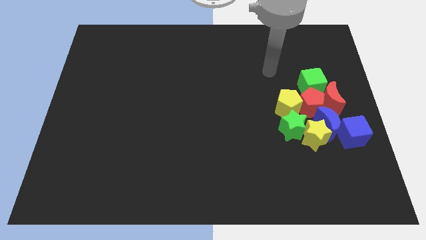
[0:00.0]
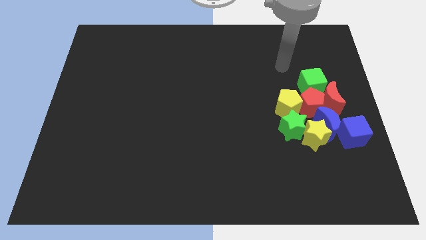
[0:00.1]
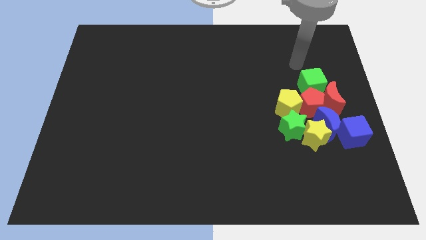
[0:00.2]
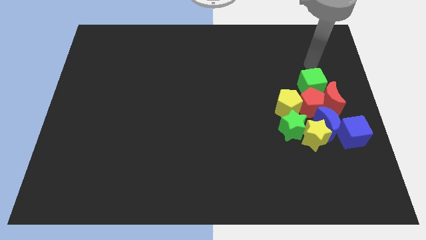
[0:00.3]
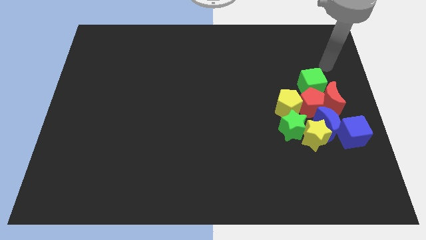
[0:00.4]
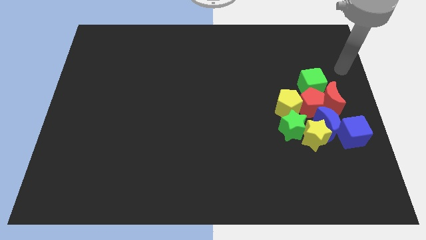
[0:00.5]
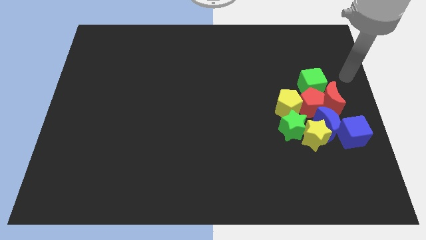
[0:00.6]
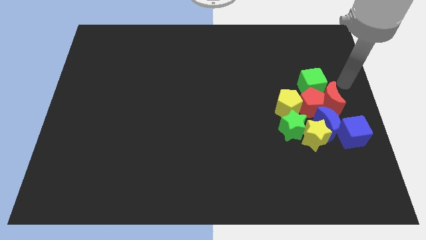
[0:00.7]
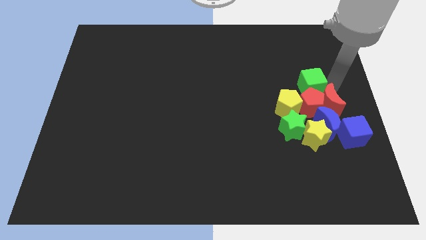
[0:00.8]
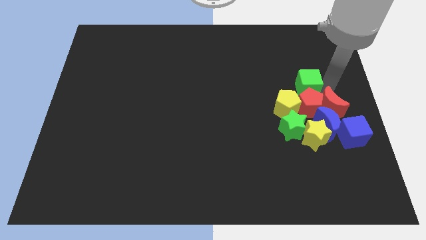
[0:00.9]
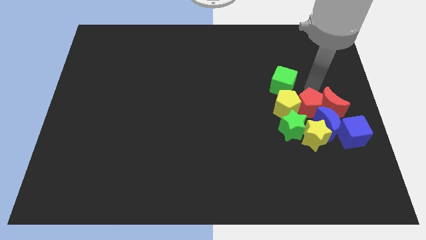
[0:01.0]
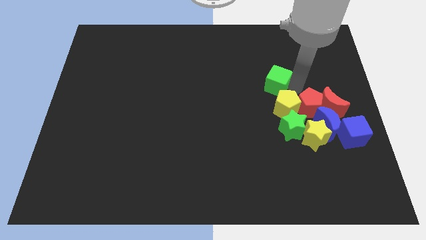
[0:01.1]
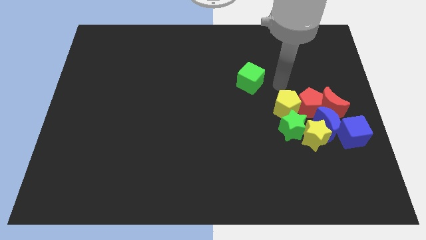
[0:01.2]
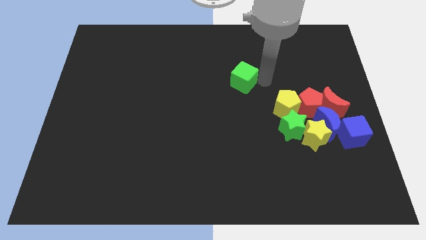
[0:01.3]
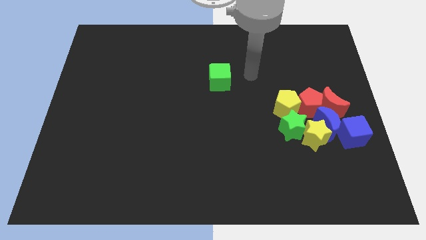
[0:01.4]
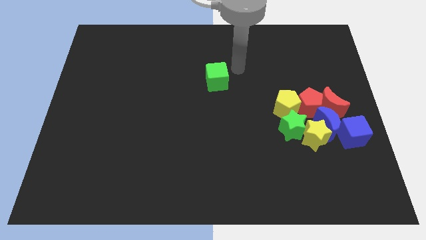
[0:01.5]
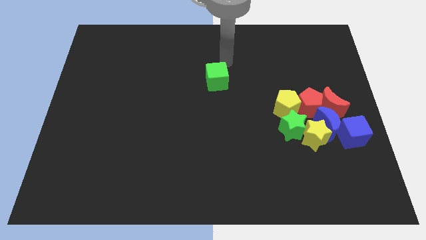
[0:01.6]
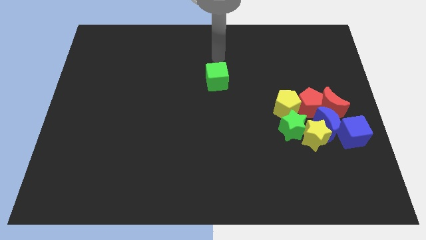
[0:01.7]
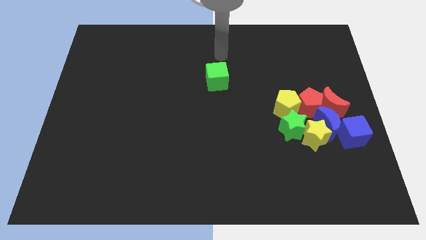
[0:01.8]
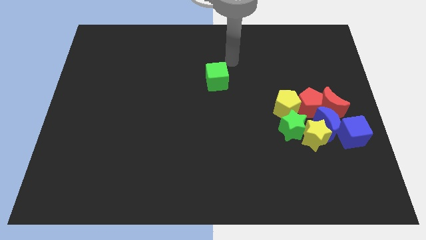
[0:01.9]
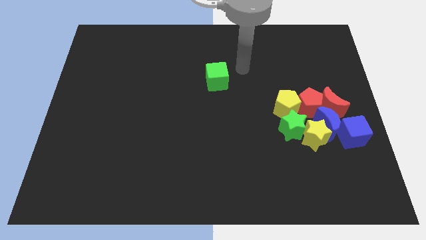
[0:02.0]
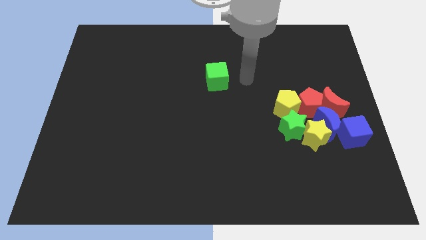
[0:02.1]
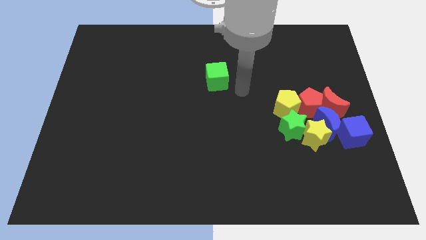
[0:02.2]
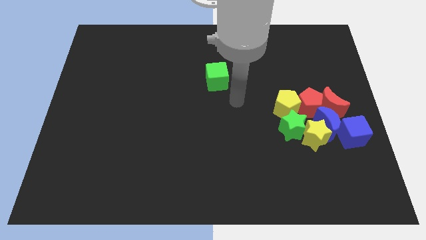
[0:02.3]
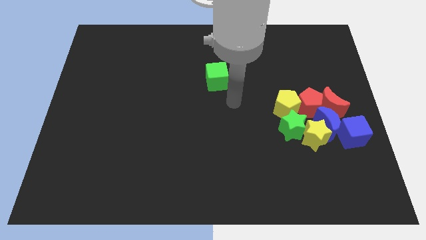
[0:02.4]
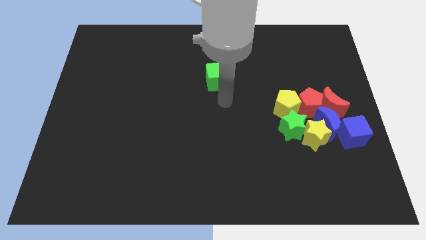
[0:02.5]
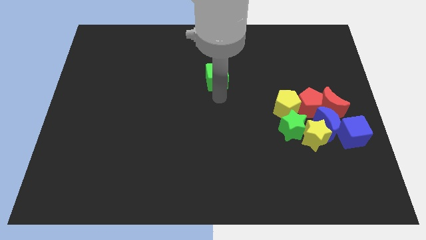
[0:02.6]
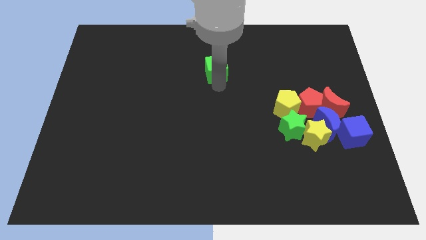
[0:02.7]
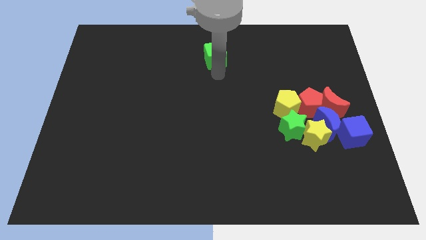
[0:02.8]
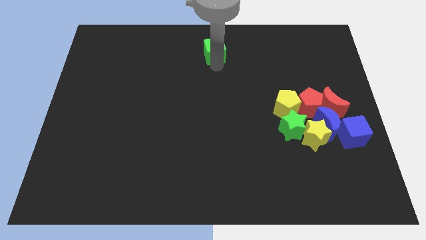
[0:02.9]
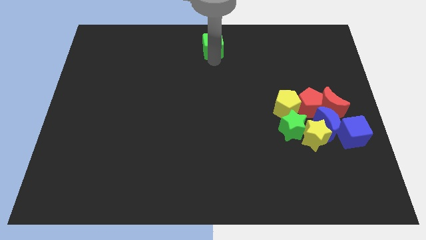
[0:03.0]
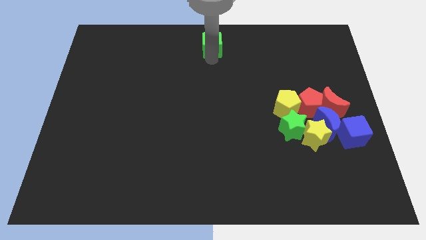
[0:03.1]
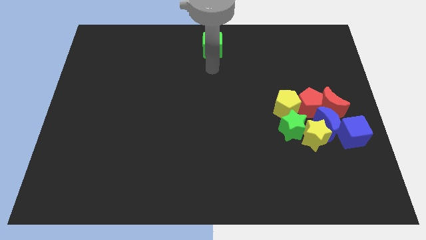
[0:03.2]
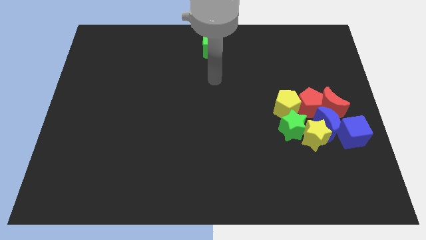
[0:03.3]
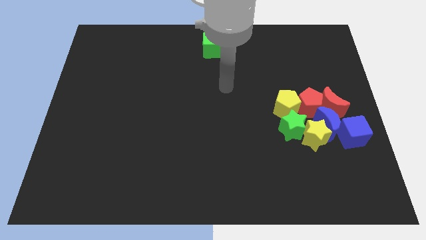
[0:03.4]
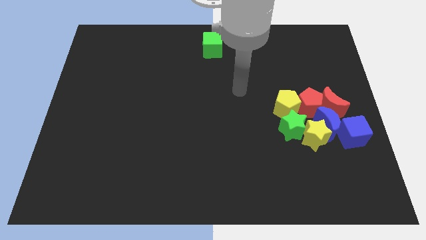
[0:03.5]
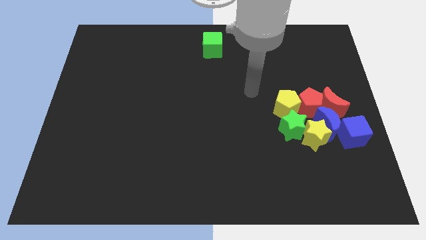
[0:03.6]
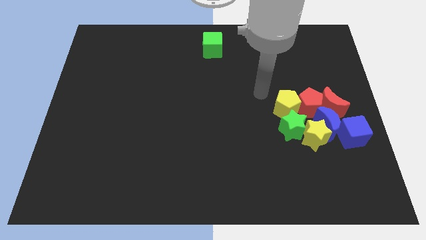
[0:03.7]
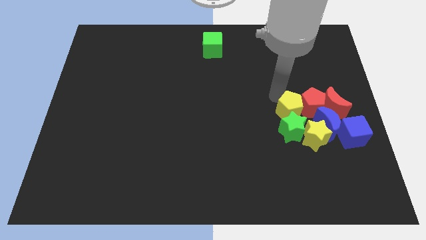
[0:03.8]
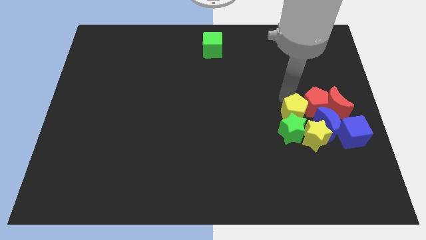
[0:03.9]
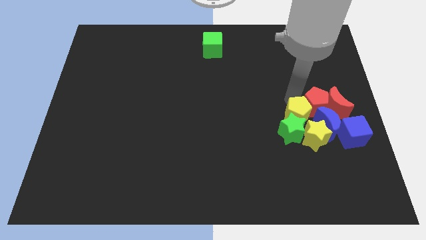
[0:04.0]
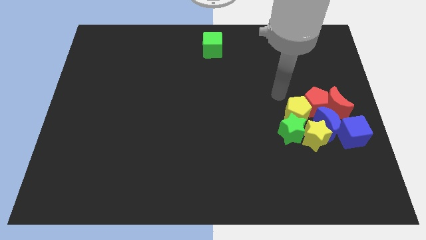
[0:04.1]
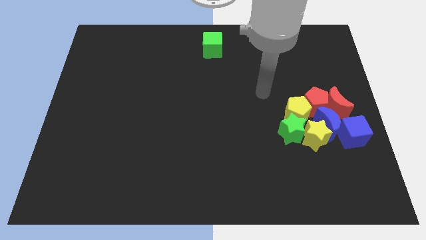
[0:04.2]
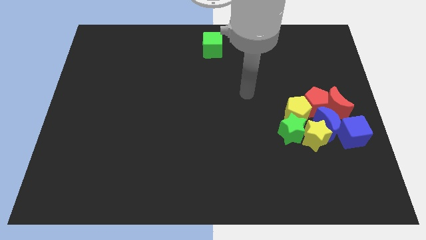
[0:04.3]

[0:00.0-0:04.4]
move the green cube towards the top center

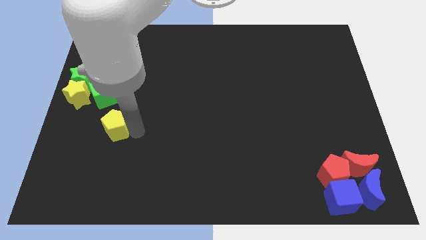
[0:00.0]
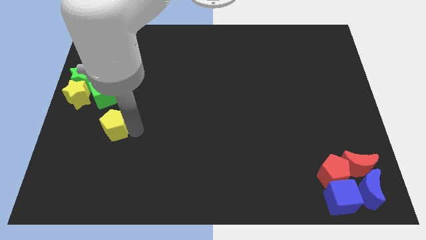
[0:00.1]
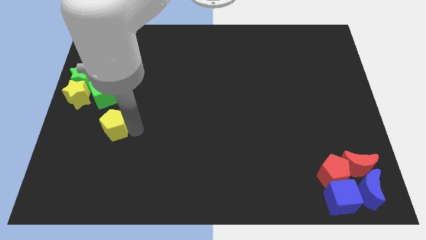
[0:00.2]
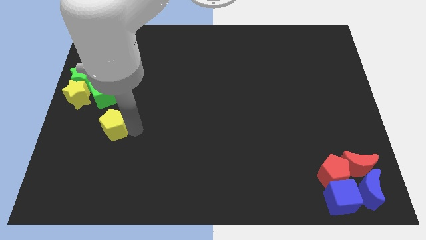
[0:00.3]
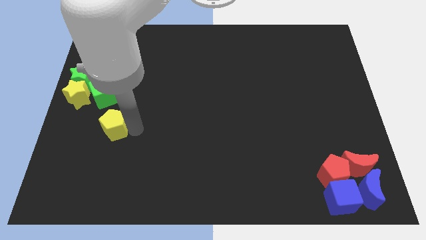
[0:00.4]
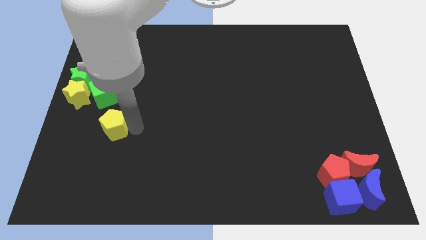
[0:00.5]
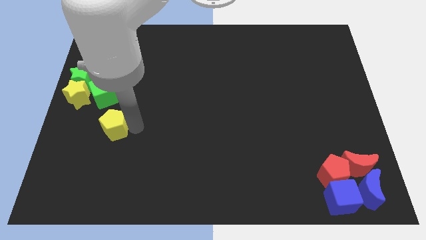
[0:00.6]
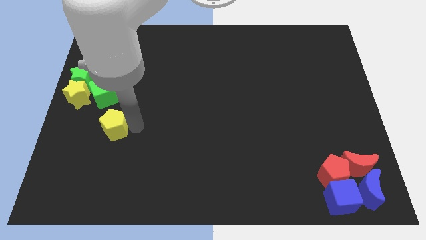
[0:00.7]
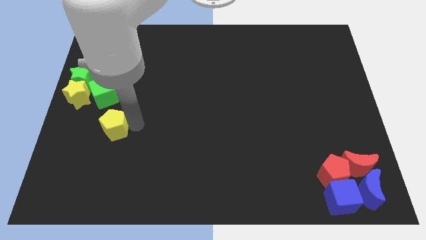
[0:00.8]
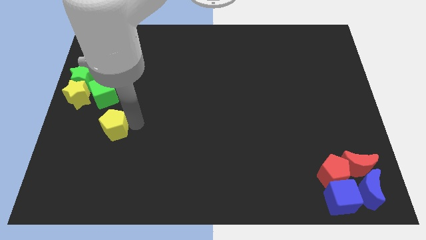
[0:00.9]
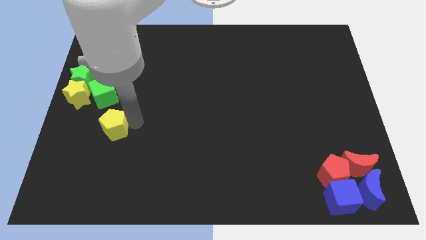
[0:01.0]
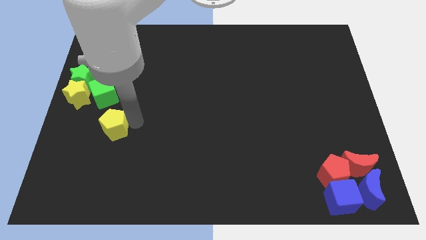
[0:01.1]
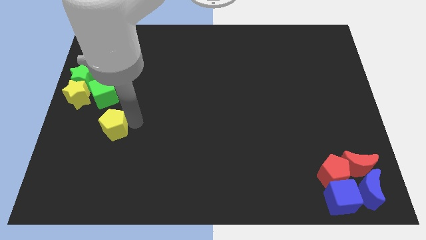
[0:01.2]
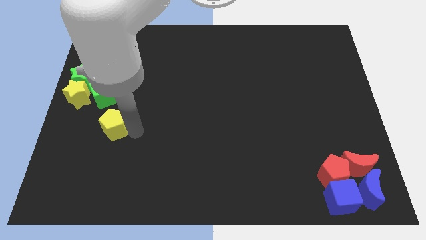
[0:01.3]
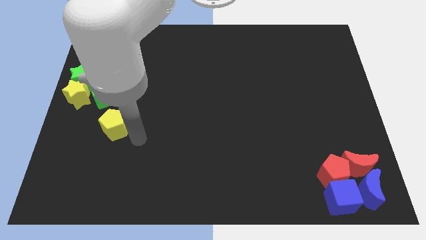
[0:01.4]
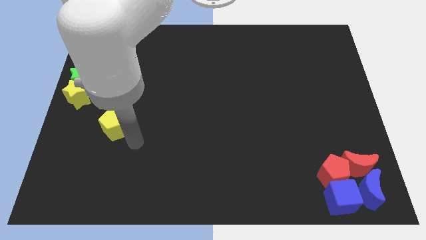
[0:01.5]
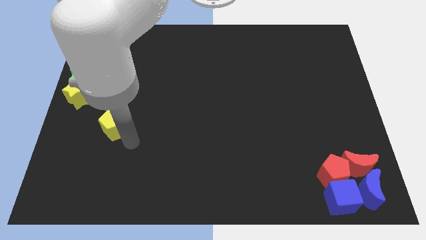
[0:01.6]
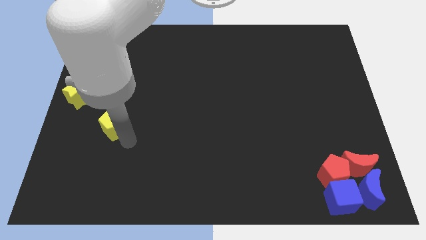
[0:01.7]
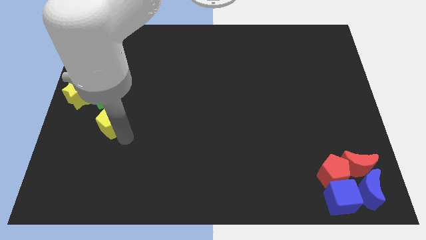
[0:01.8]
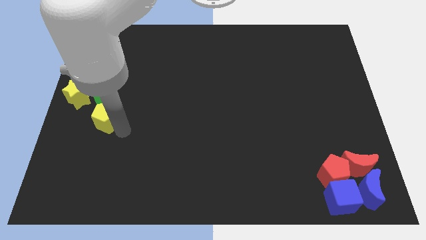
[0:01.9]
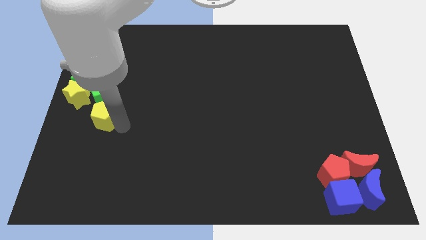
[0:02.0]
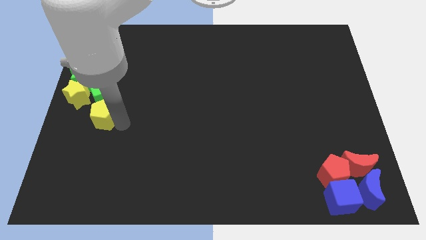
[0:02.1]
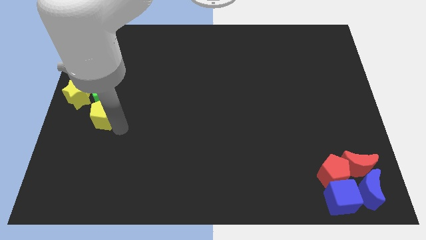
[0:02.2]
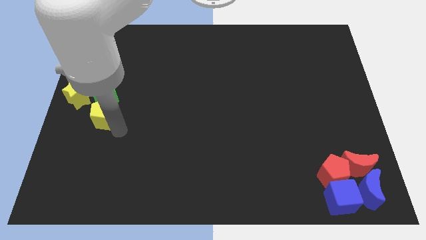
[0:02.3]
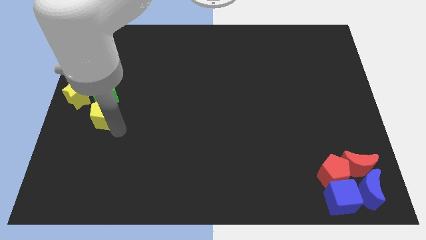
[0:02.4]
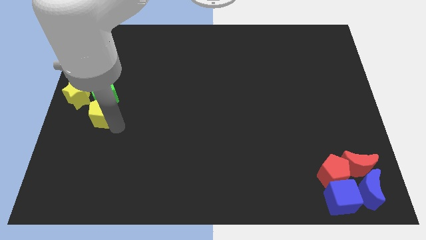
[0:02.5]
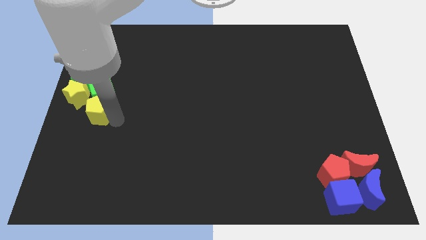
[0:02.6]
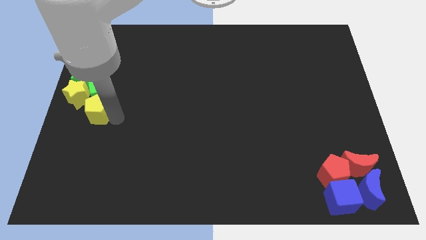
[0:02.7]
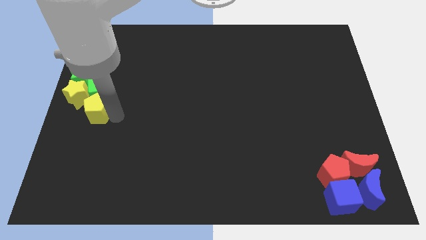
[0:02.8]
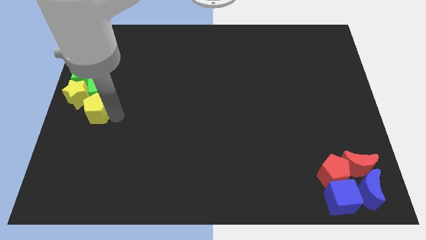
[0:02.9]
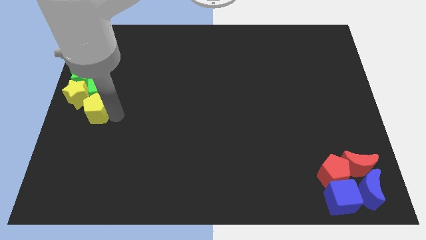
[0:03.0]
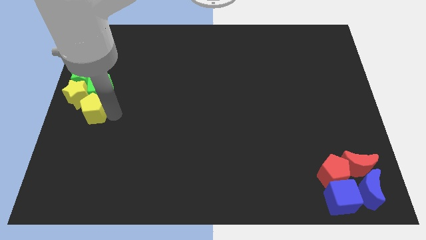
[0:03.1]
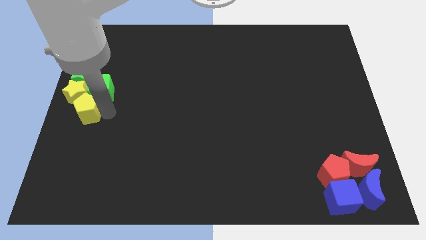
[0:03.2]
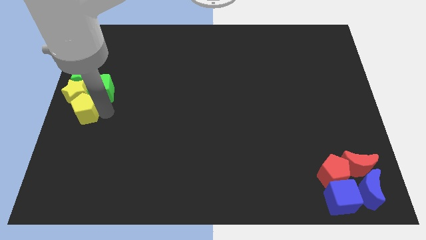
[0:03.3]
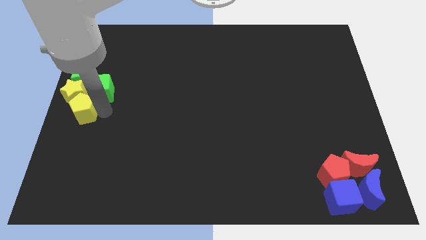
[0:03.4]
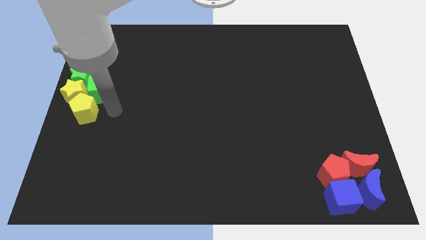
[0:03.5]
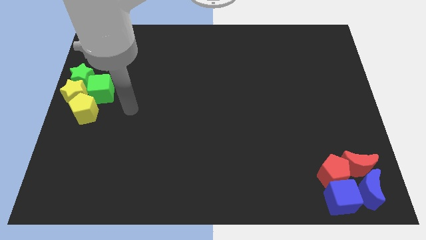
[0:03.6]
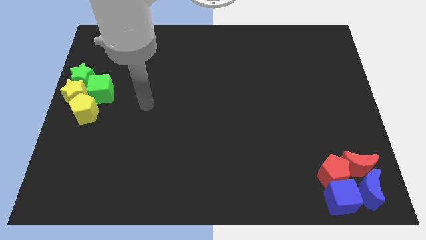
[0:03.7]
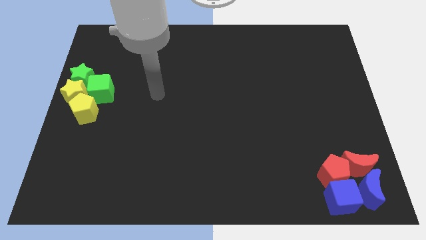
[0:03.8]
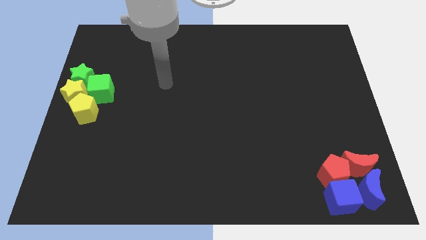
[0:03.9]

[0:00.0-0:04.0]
slide the yellow pentagon into the group of blocks

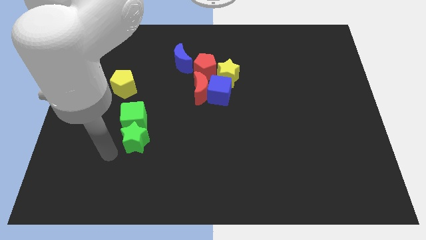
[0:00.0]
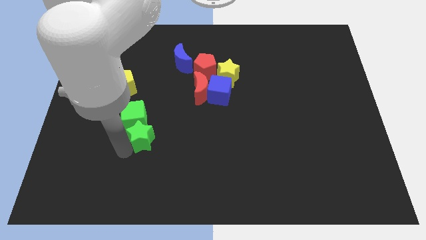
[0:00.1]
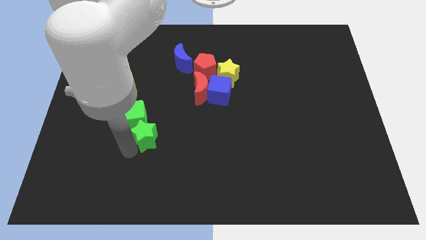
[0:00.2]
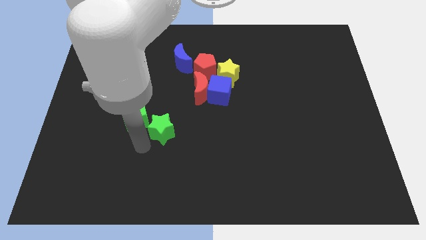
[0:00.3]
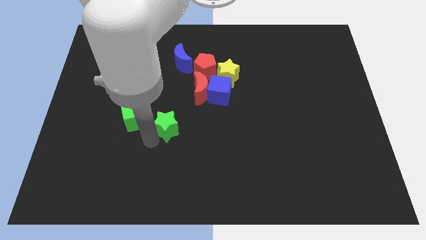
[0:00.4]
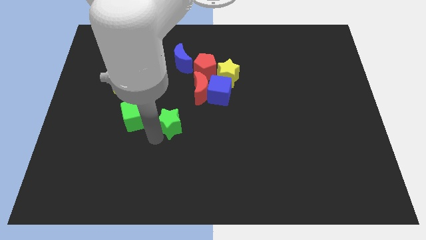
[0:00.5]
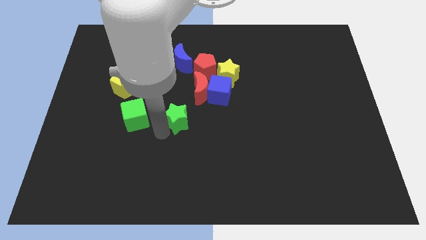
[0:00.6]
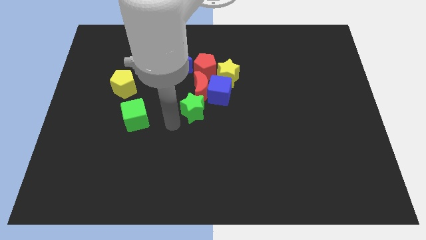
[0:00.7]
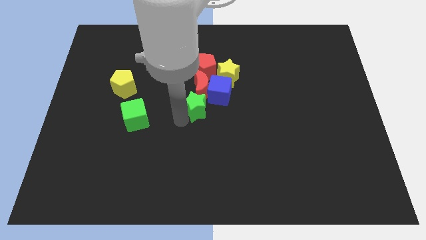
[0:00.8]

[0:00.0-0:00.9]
move the green star to the group of blocks
